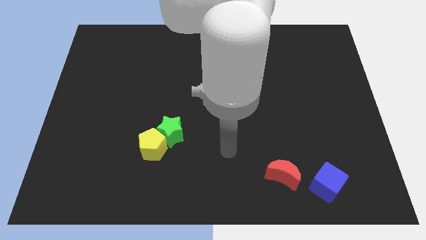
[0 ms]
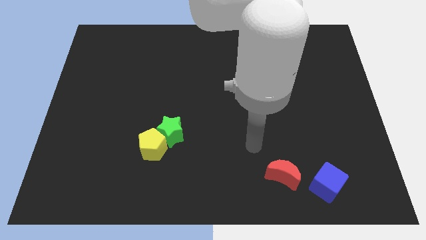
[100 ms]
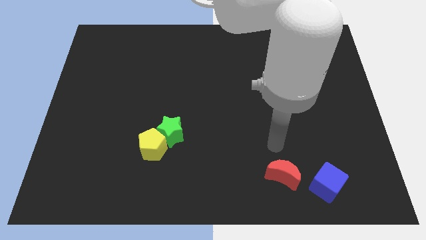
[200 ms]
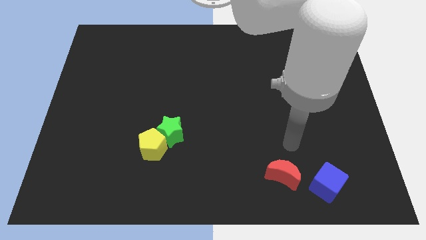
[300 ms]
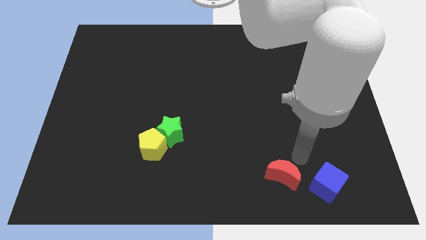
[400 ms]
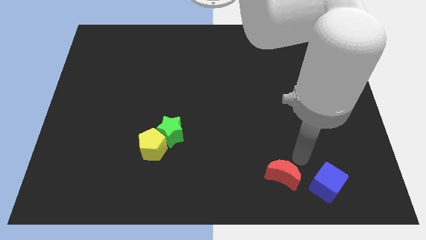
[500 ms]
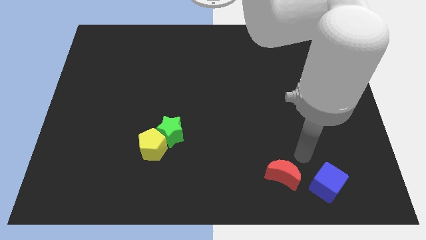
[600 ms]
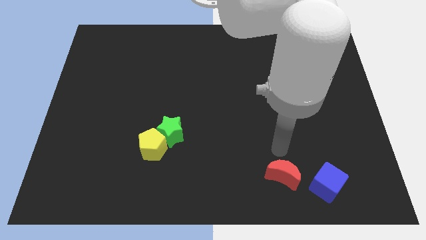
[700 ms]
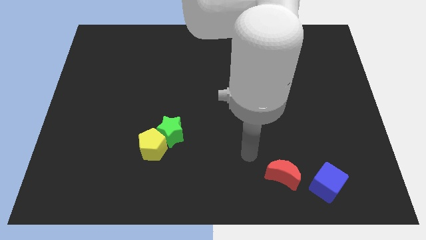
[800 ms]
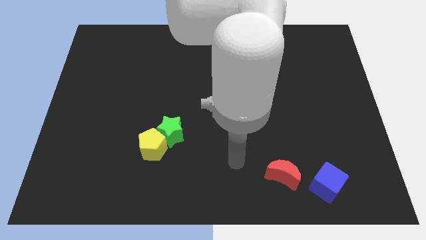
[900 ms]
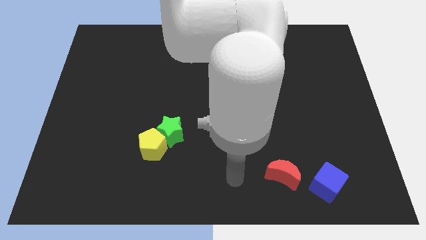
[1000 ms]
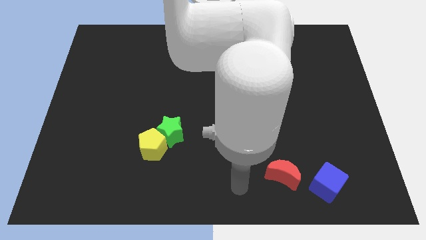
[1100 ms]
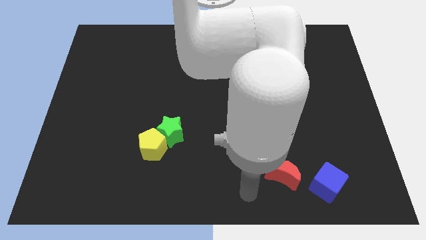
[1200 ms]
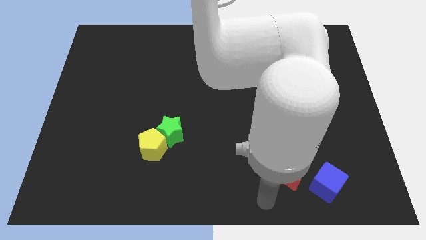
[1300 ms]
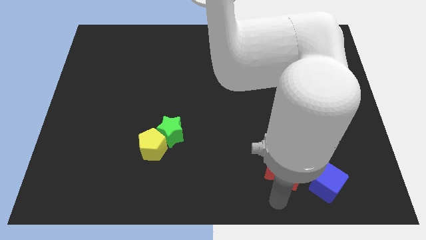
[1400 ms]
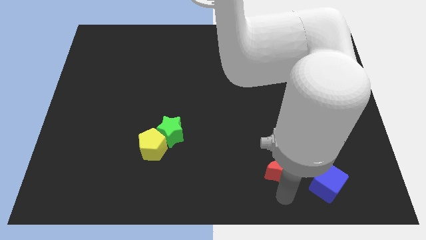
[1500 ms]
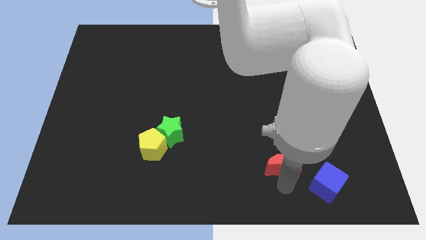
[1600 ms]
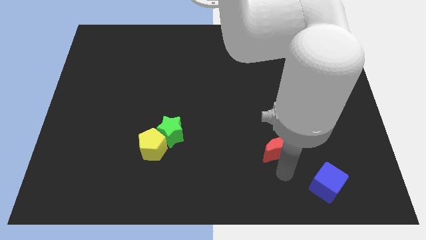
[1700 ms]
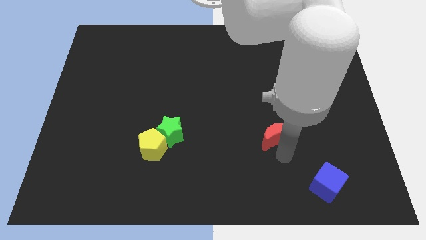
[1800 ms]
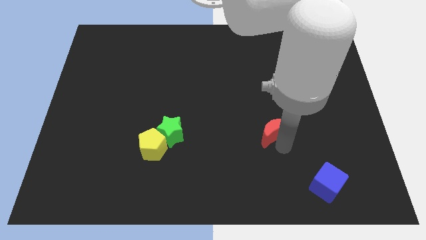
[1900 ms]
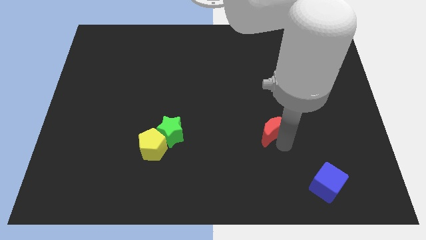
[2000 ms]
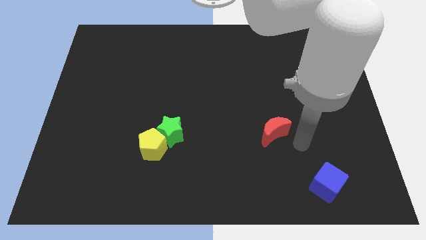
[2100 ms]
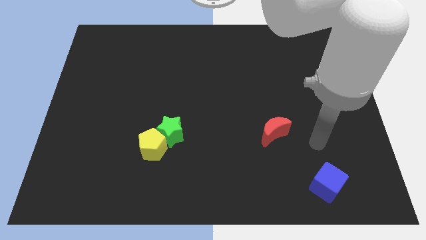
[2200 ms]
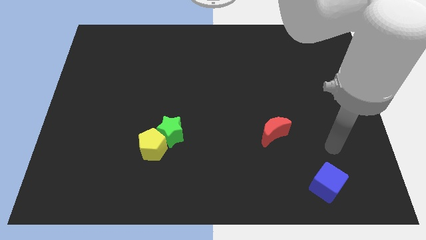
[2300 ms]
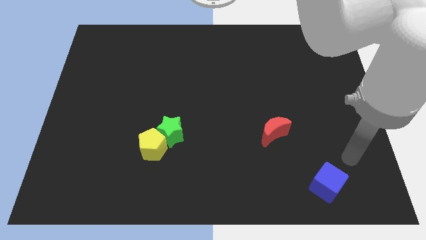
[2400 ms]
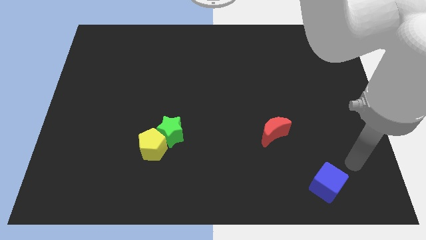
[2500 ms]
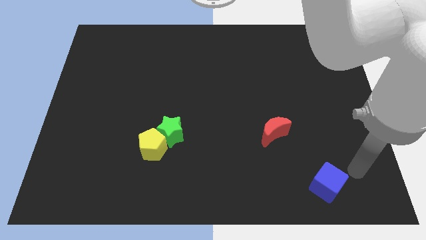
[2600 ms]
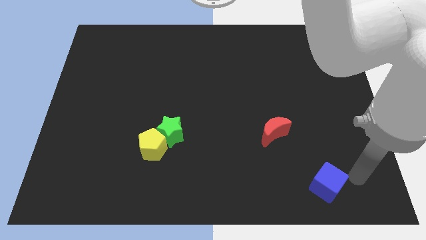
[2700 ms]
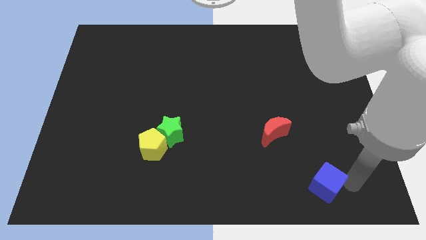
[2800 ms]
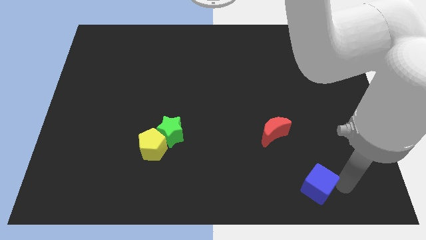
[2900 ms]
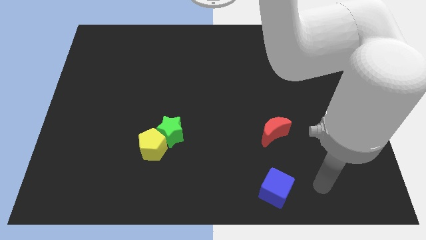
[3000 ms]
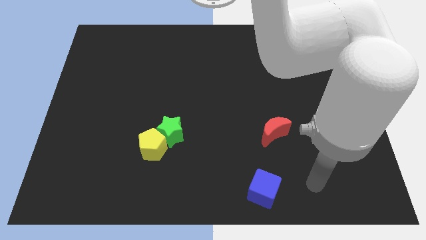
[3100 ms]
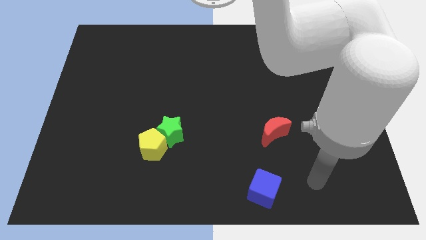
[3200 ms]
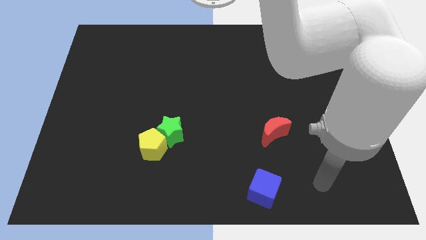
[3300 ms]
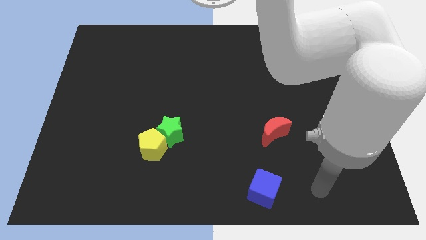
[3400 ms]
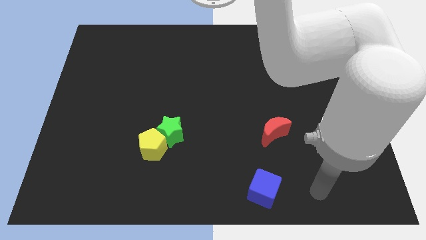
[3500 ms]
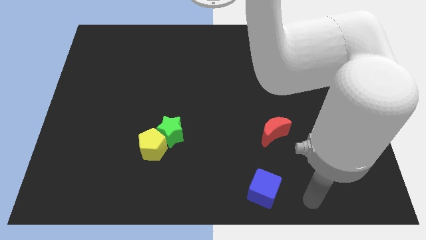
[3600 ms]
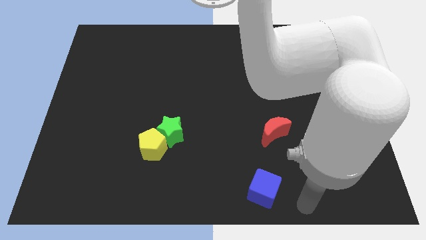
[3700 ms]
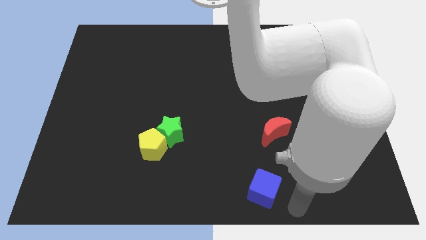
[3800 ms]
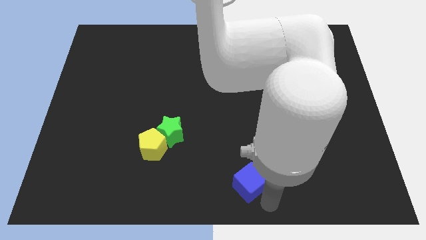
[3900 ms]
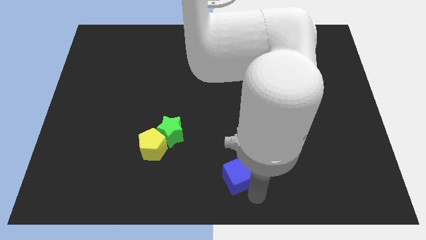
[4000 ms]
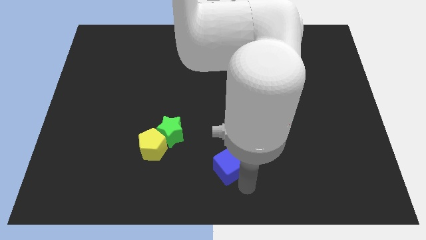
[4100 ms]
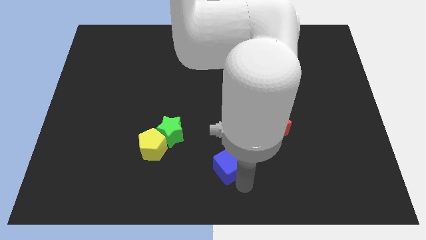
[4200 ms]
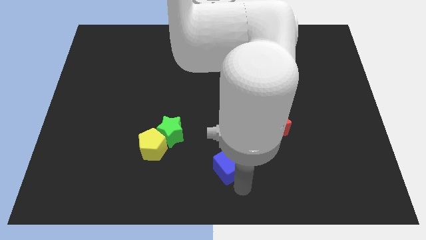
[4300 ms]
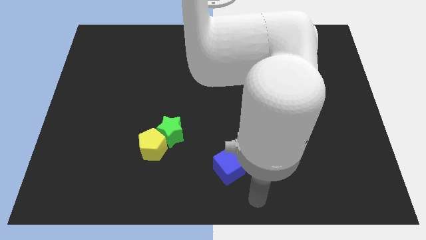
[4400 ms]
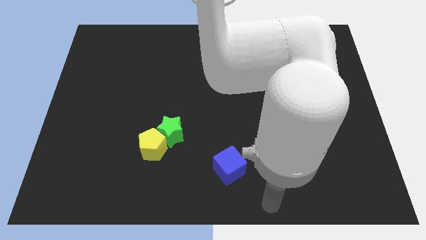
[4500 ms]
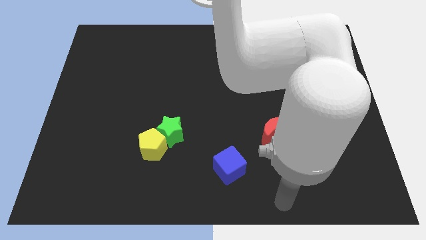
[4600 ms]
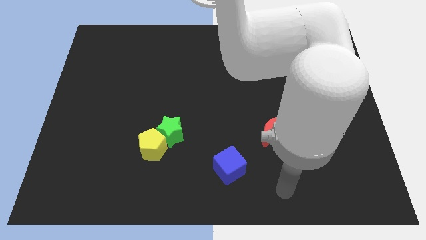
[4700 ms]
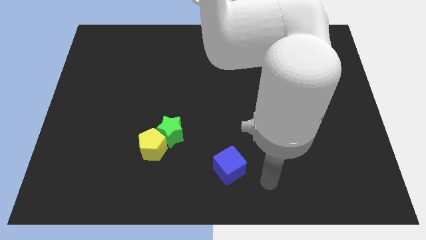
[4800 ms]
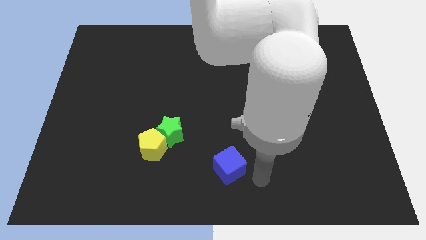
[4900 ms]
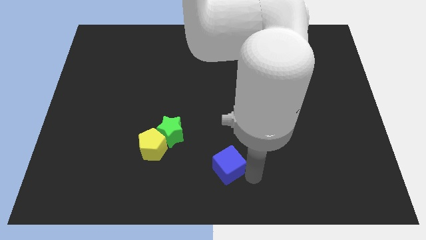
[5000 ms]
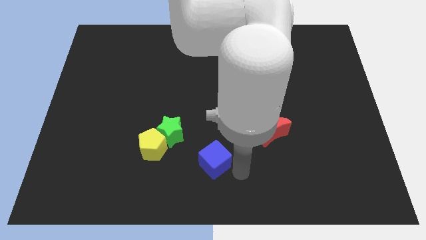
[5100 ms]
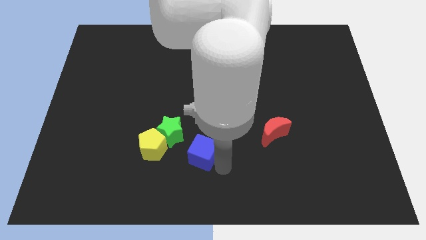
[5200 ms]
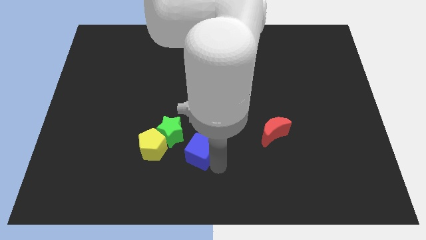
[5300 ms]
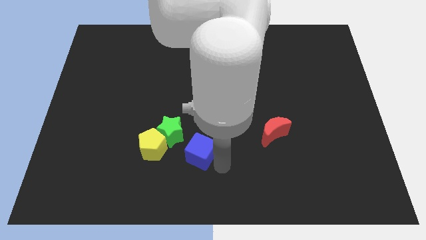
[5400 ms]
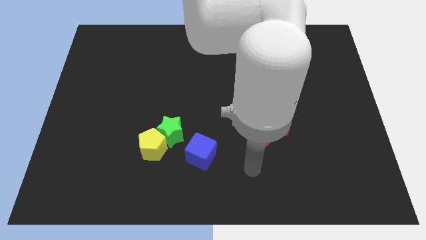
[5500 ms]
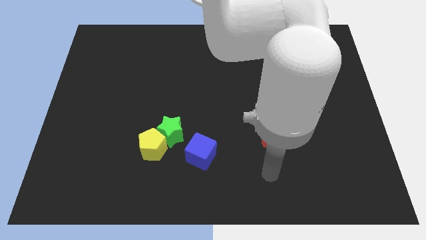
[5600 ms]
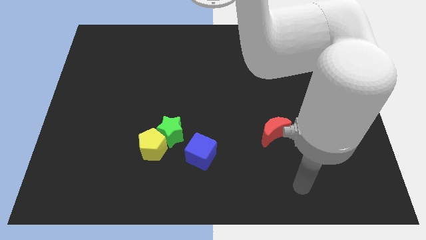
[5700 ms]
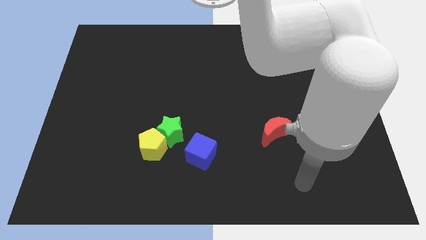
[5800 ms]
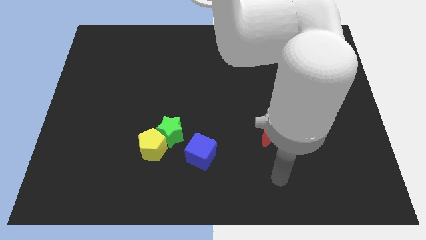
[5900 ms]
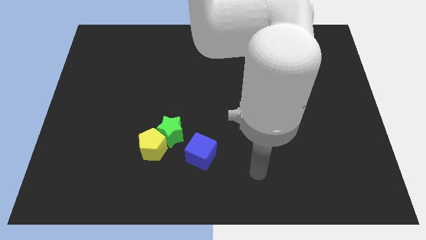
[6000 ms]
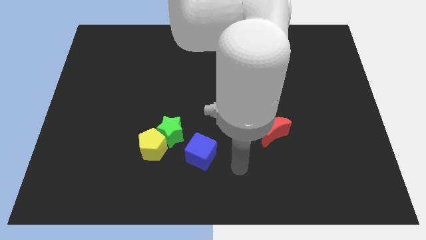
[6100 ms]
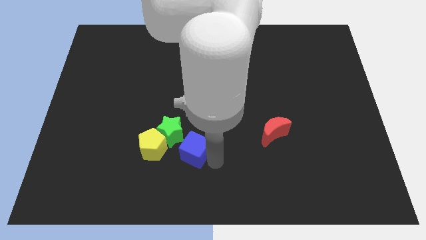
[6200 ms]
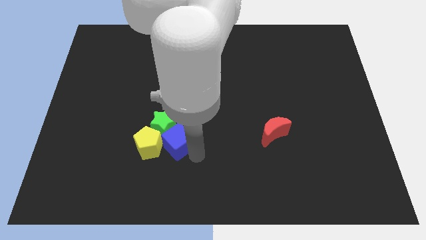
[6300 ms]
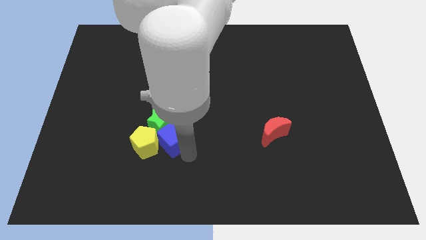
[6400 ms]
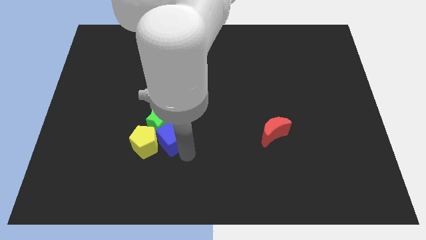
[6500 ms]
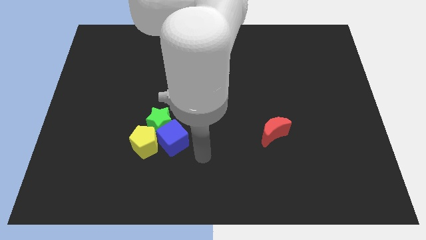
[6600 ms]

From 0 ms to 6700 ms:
move the cube towards the yellow block

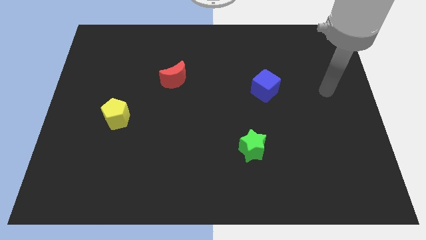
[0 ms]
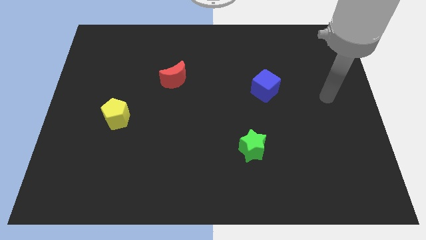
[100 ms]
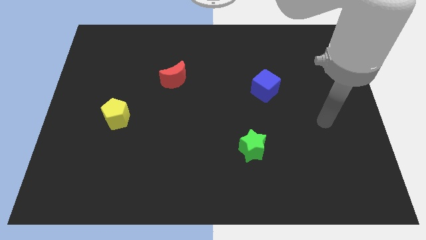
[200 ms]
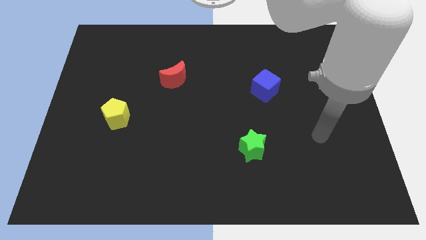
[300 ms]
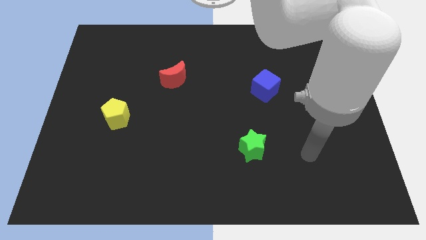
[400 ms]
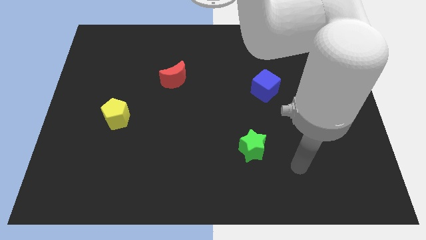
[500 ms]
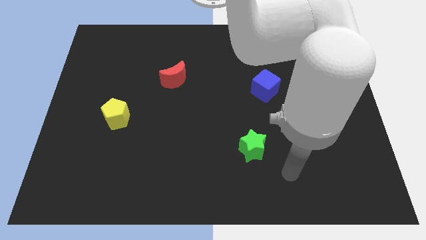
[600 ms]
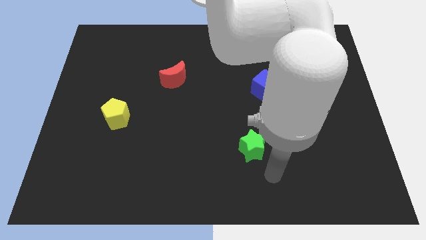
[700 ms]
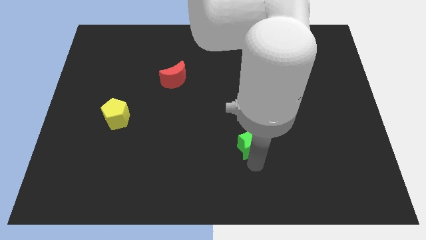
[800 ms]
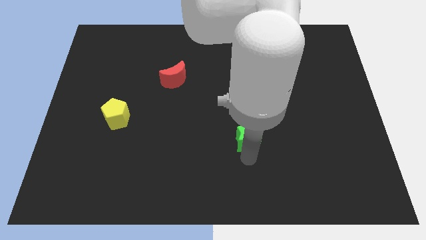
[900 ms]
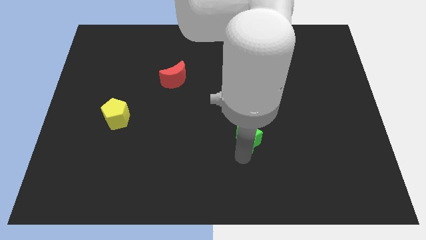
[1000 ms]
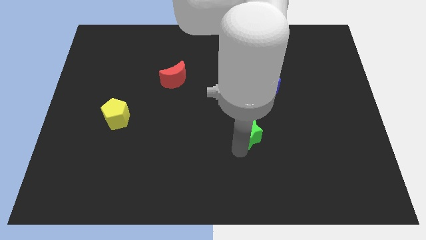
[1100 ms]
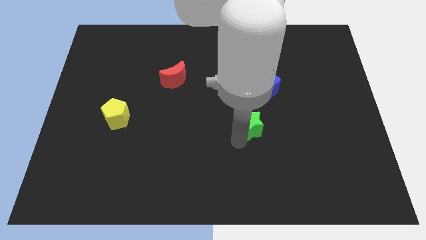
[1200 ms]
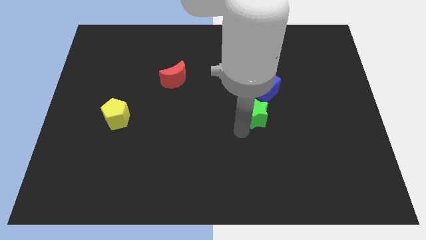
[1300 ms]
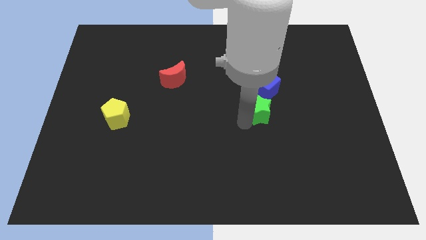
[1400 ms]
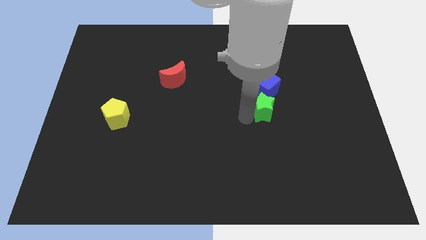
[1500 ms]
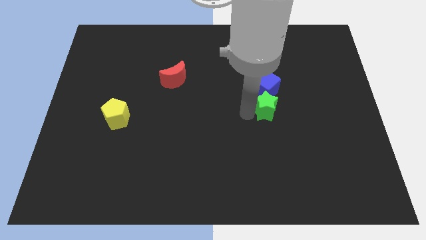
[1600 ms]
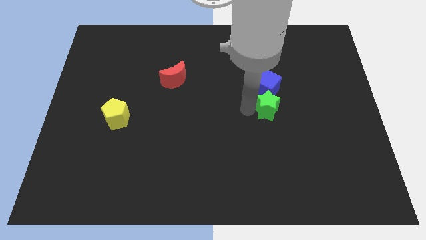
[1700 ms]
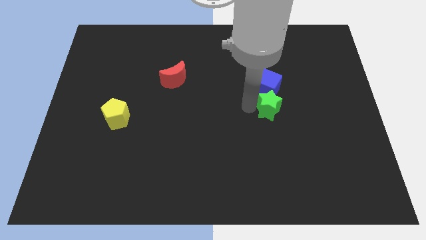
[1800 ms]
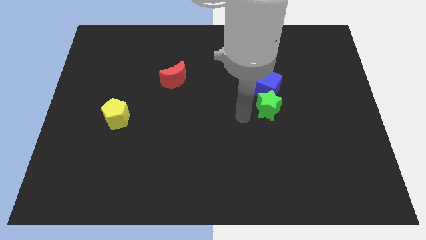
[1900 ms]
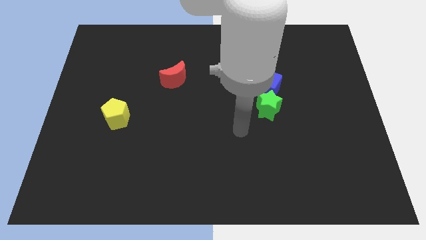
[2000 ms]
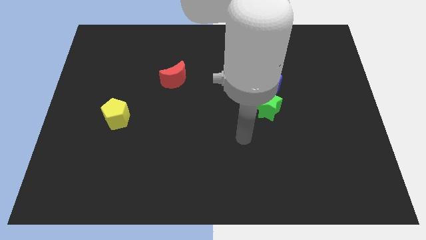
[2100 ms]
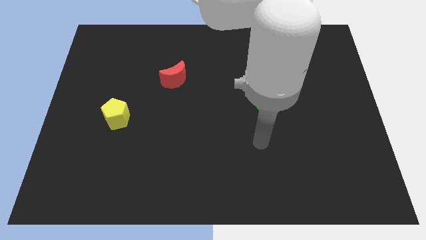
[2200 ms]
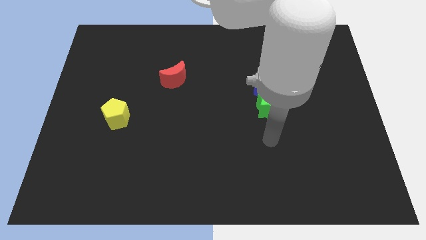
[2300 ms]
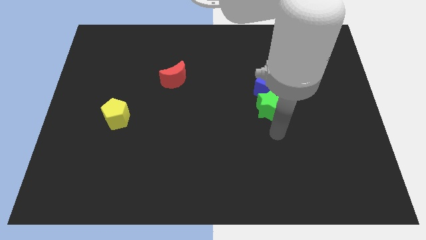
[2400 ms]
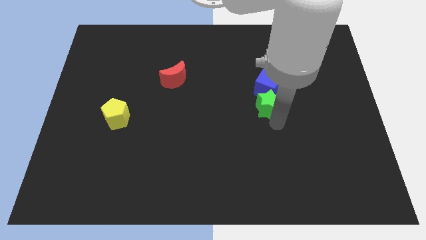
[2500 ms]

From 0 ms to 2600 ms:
slide the green block close to the blue cube
